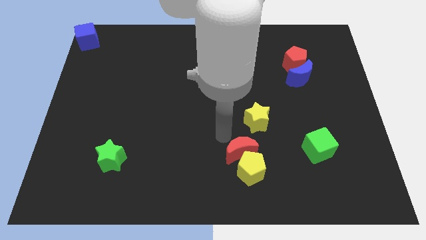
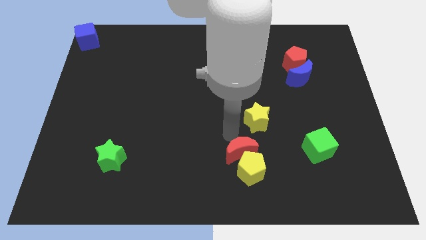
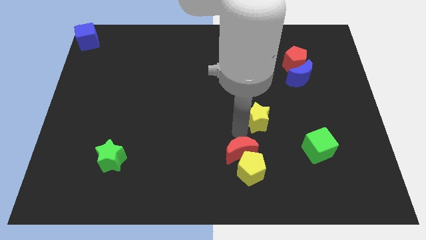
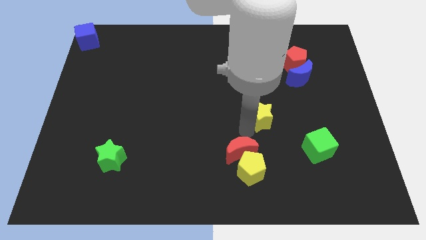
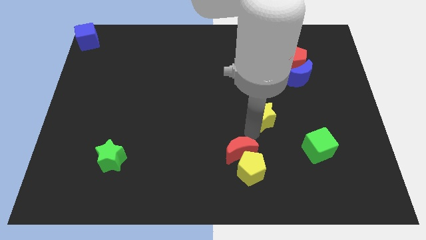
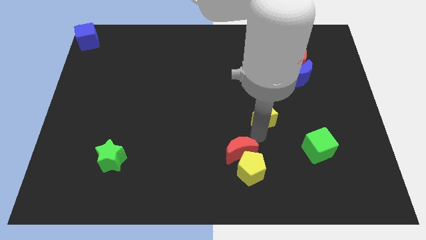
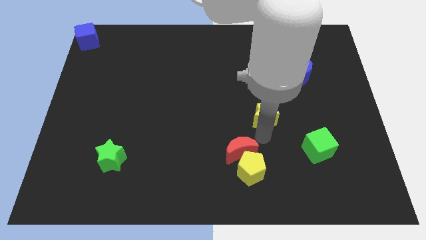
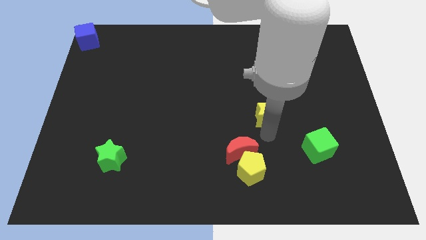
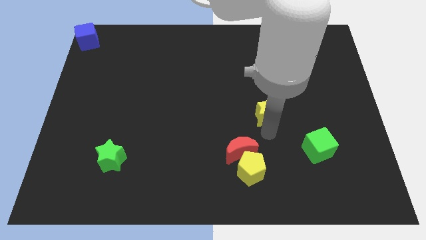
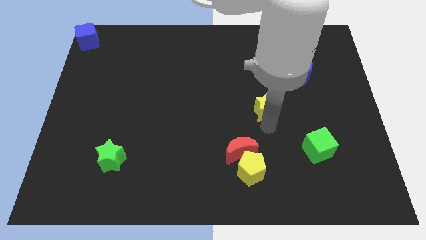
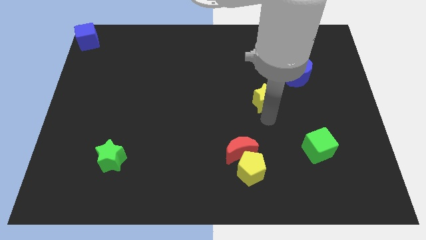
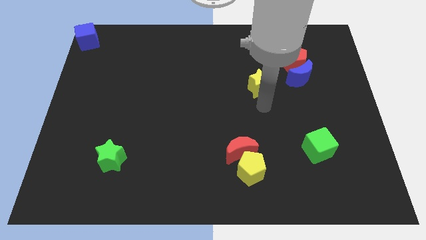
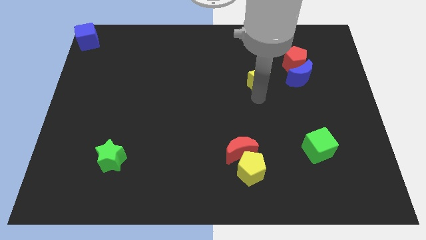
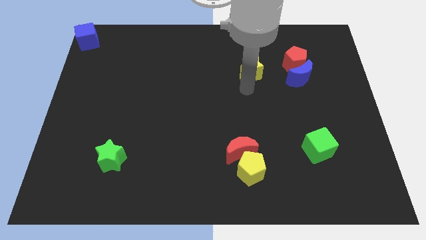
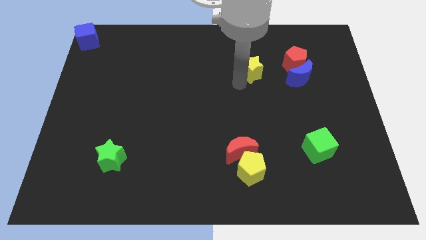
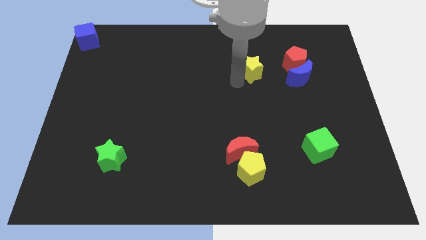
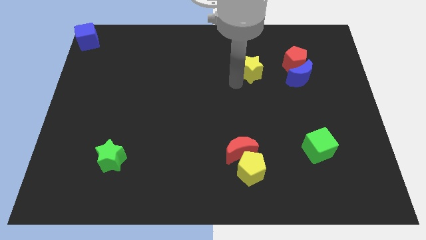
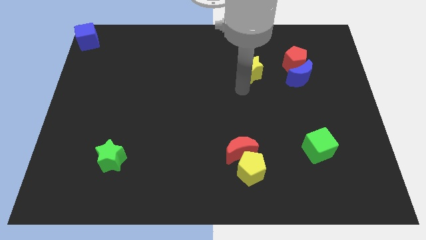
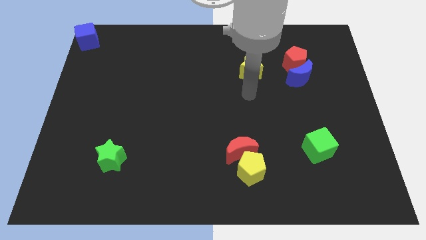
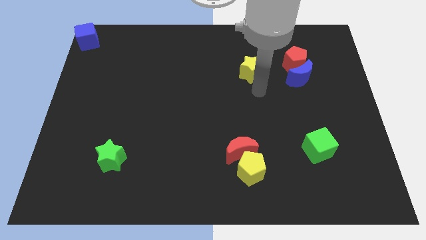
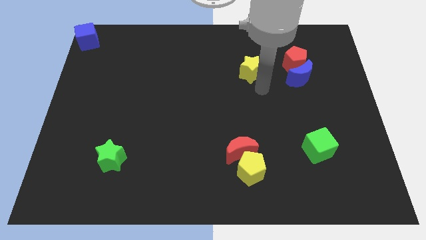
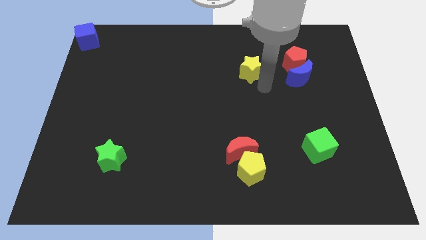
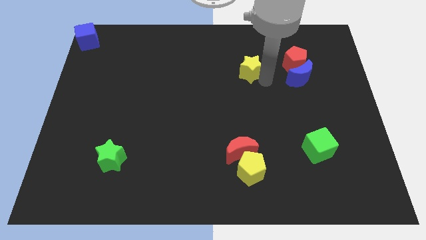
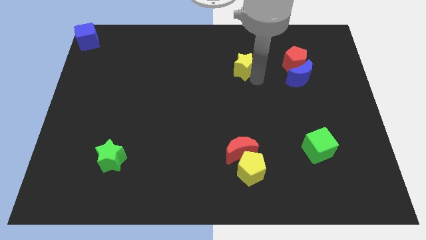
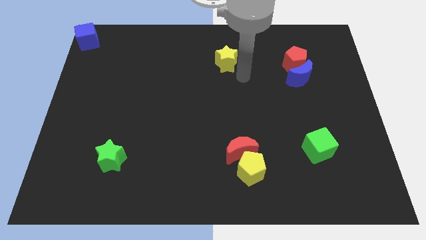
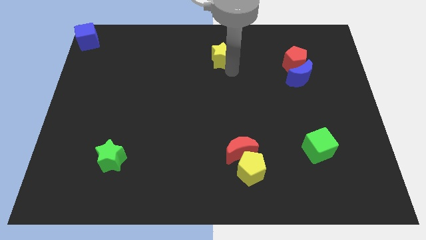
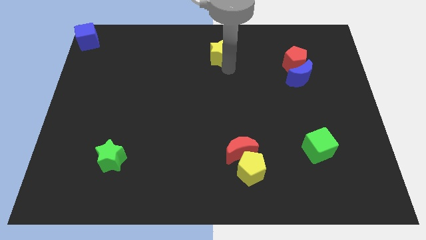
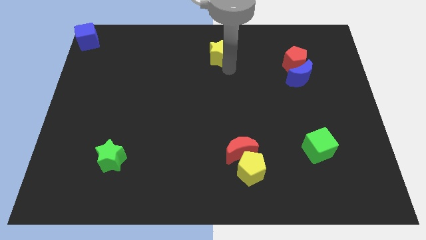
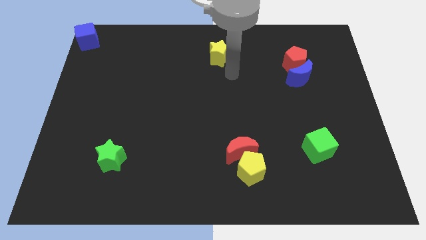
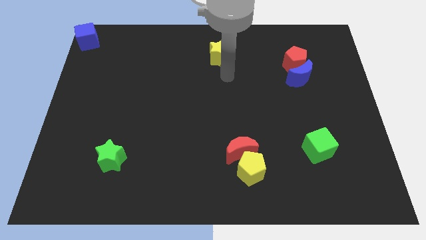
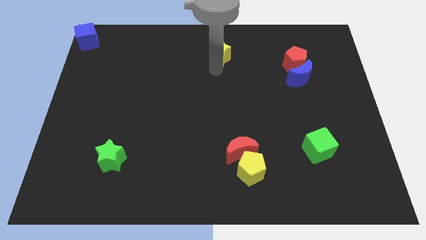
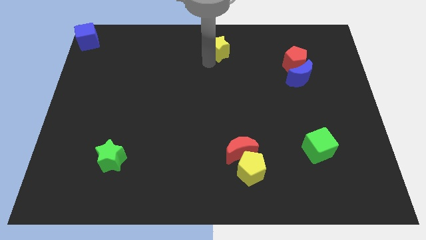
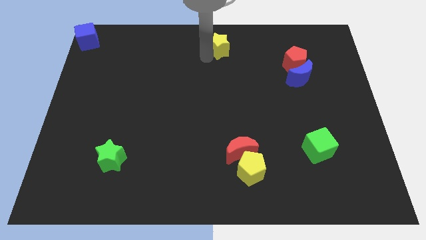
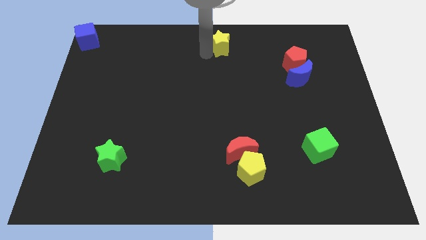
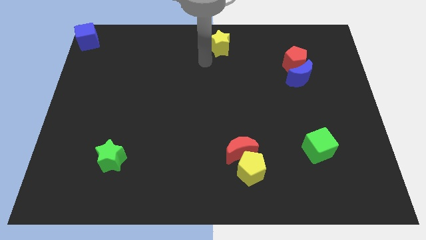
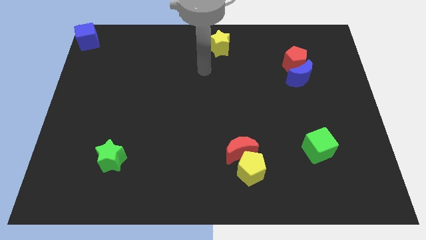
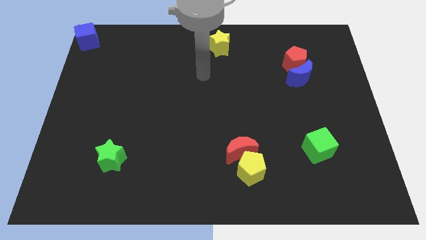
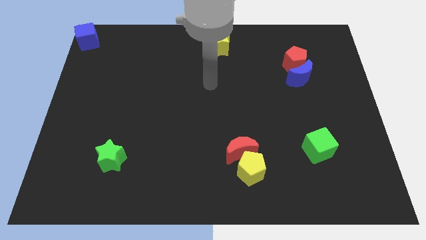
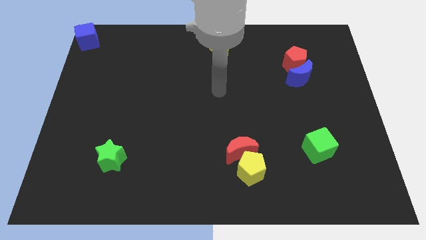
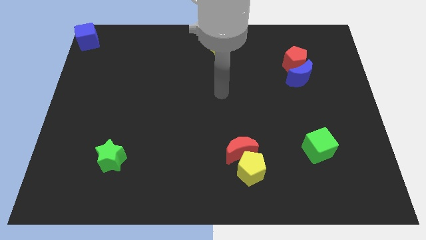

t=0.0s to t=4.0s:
place the yellow star towards the top center of the board

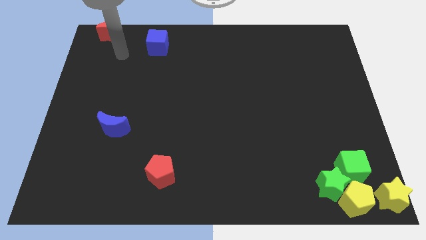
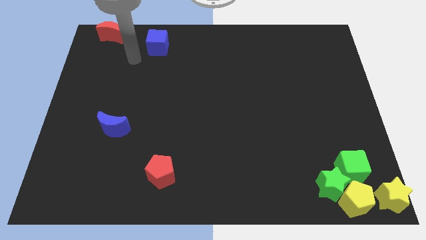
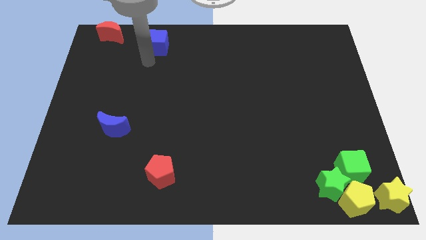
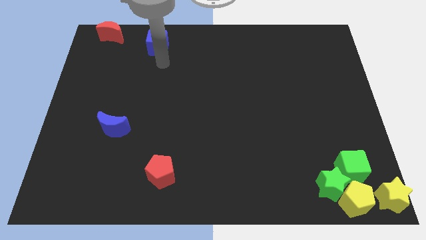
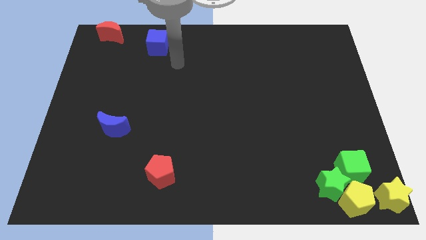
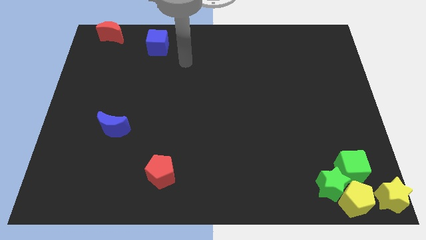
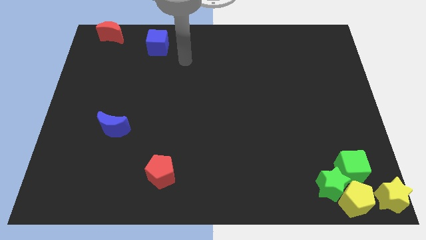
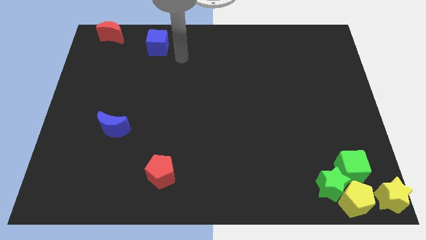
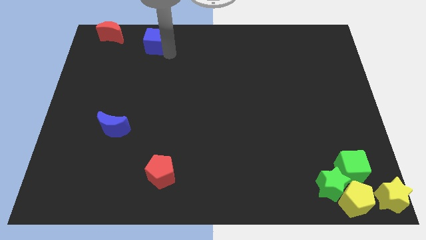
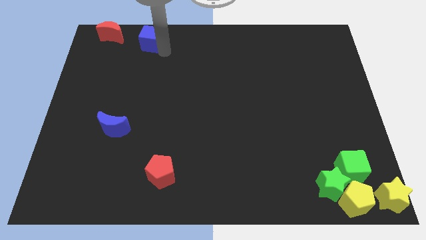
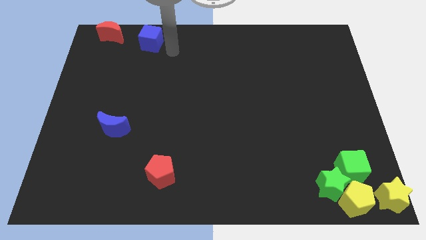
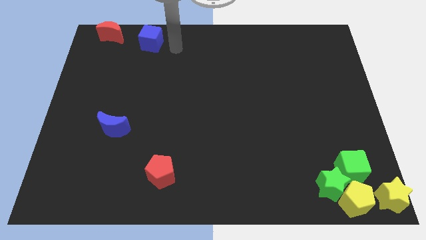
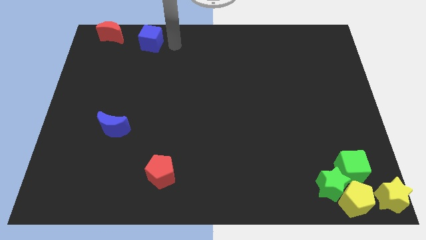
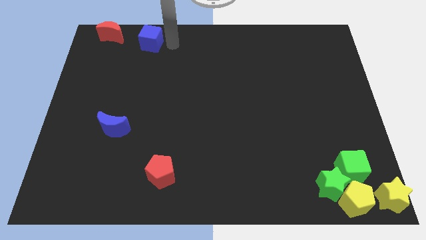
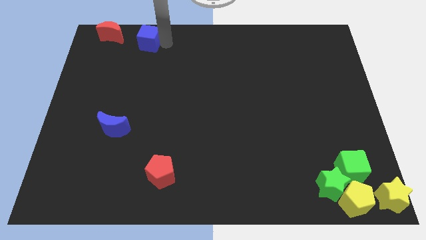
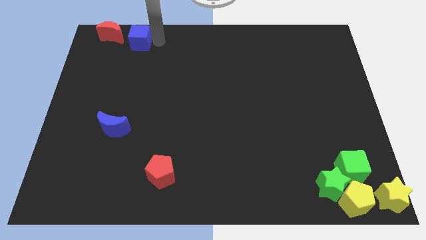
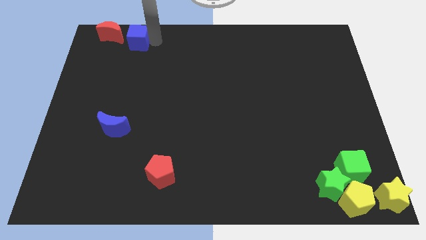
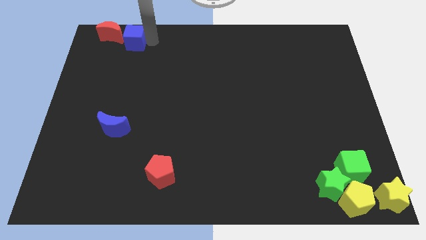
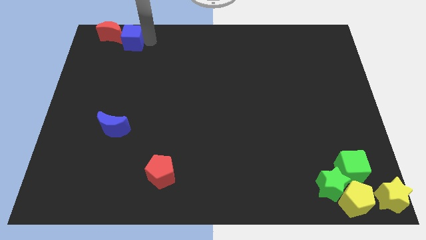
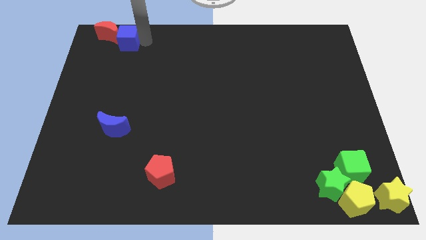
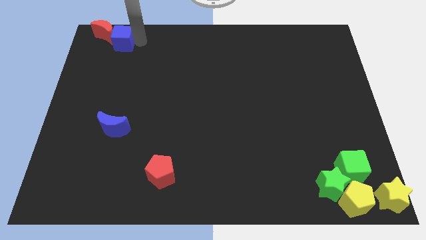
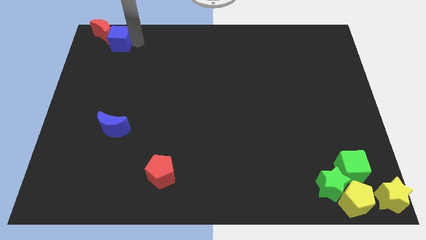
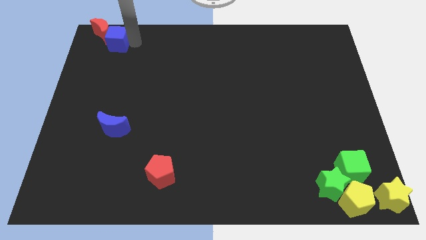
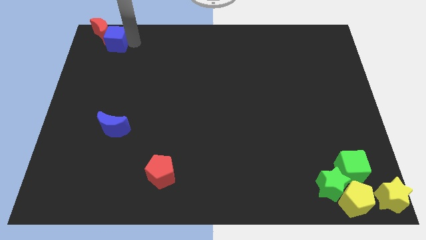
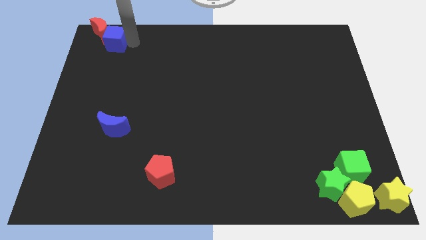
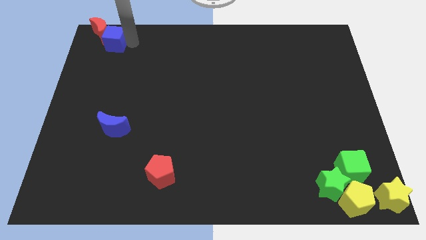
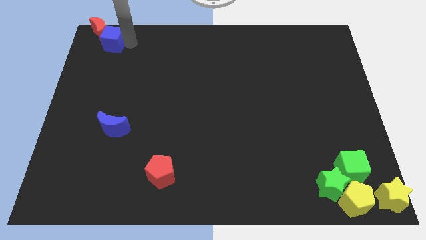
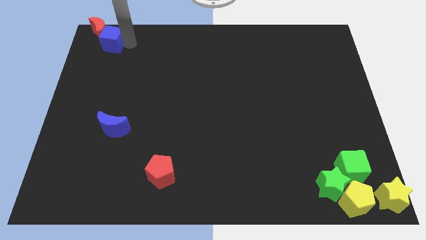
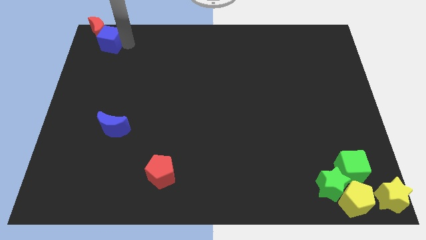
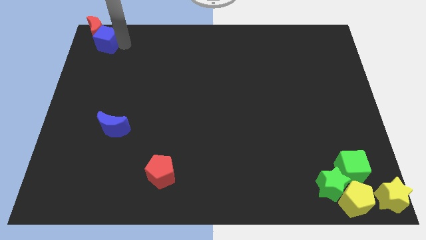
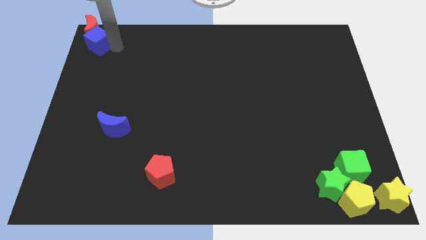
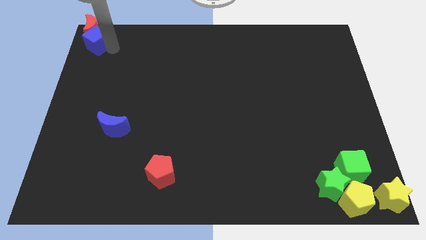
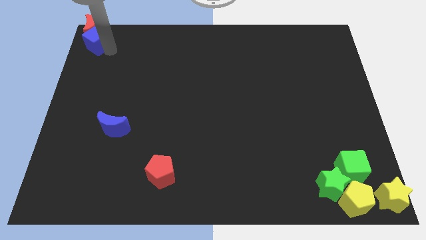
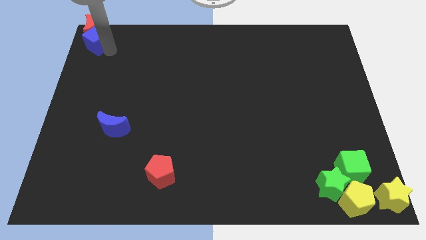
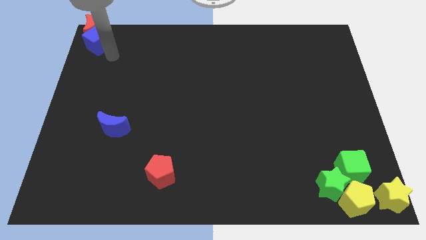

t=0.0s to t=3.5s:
push the blue cube into the red moon

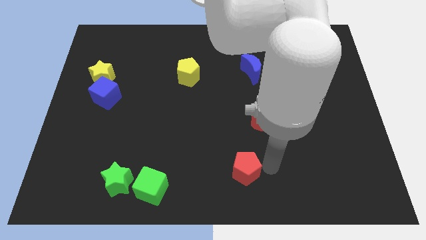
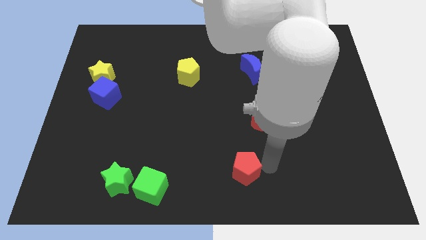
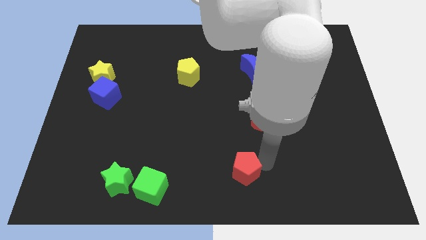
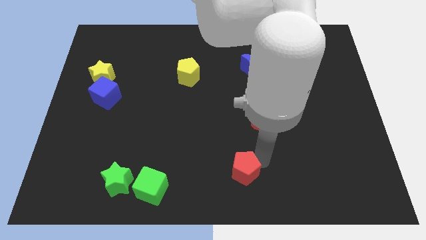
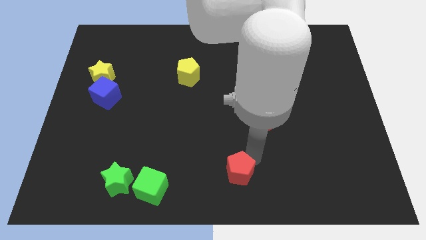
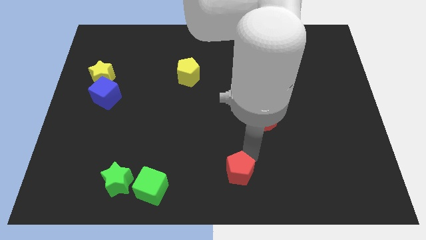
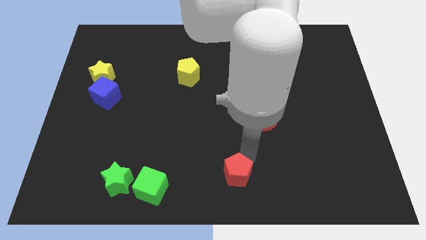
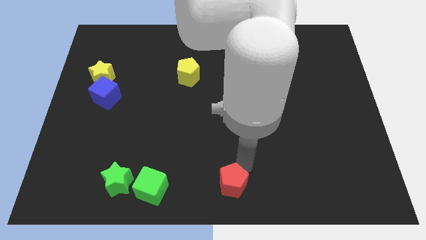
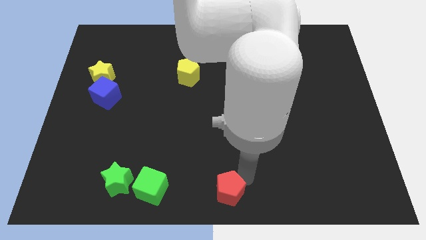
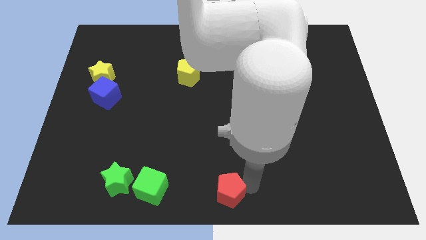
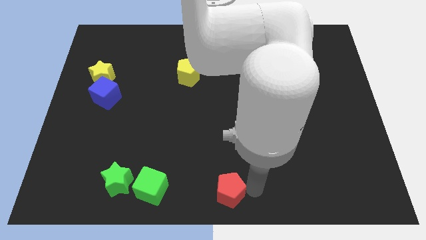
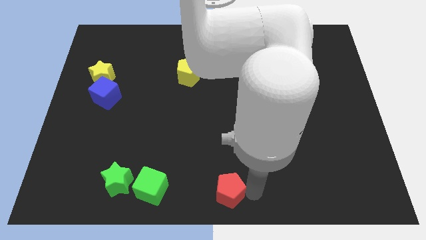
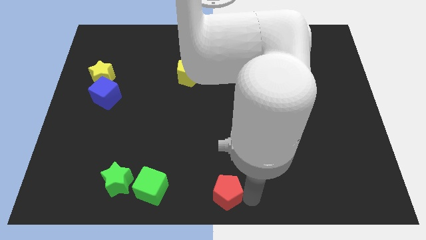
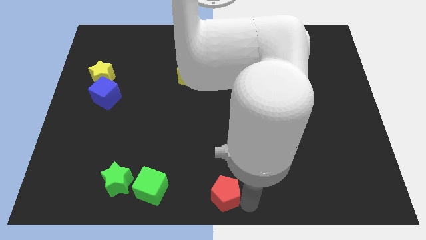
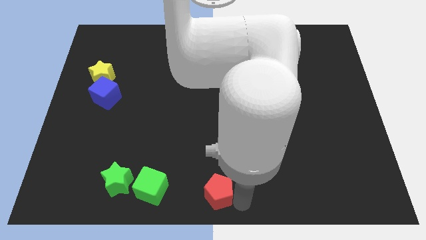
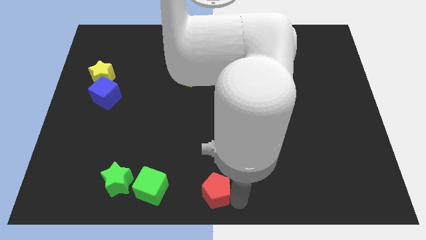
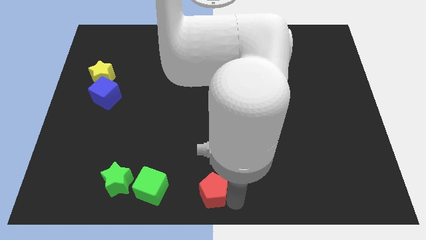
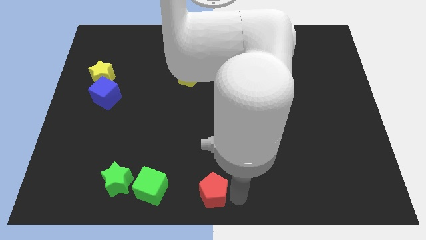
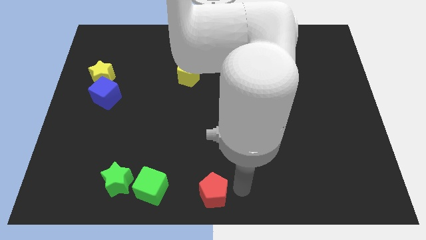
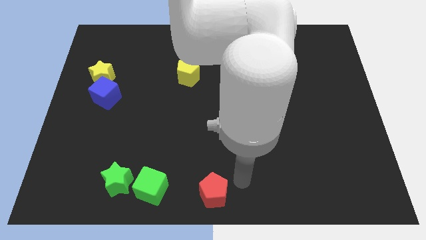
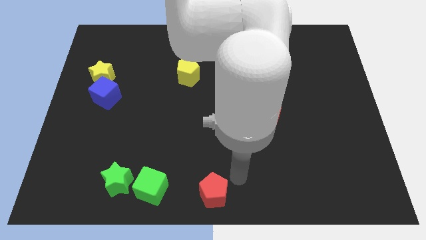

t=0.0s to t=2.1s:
move the red pentagon to the left
